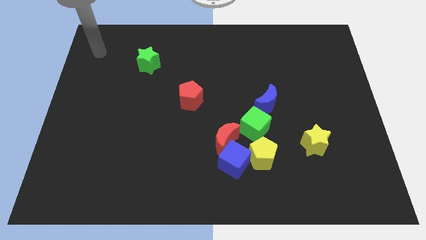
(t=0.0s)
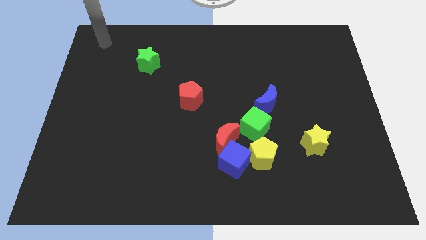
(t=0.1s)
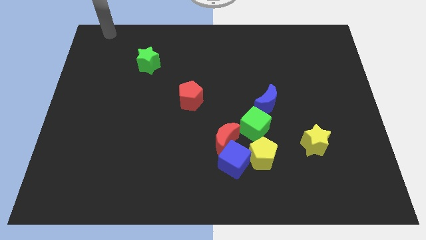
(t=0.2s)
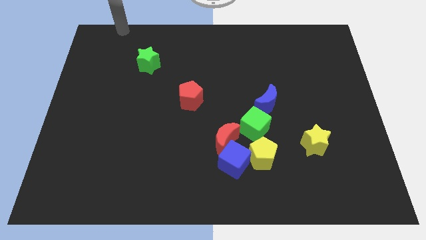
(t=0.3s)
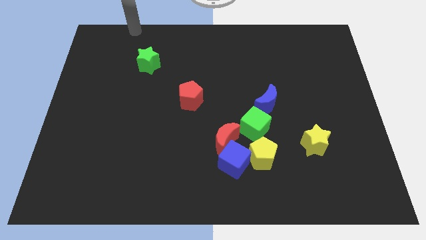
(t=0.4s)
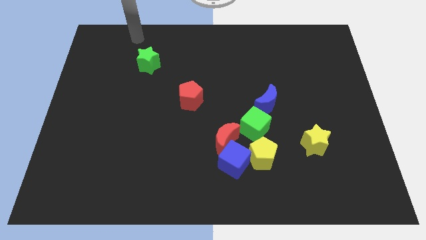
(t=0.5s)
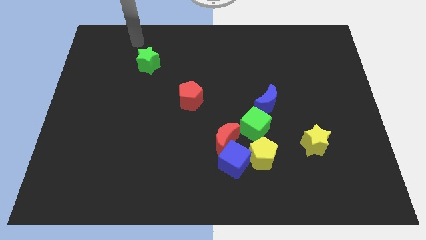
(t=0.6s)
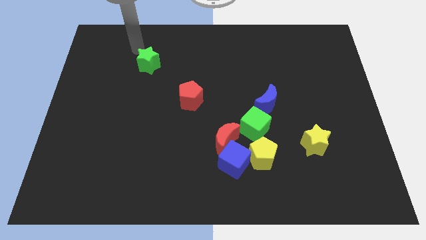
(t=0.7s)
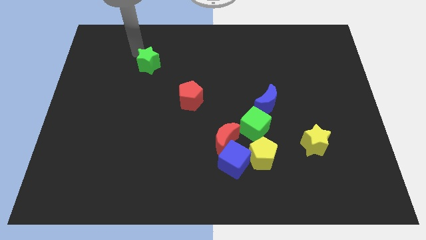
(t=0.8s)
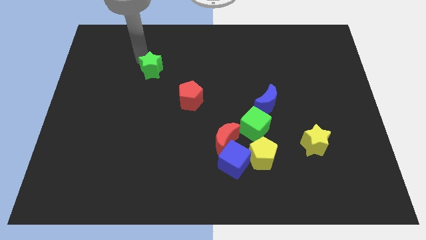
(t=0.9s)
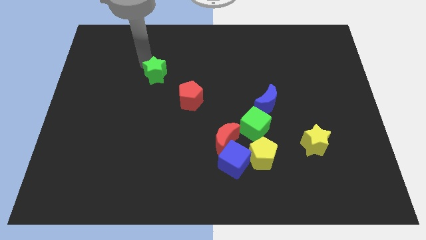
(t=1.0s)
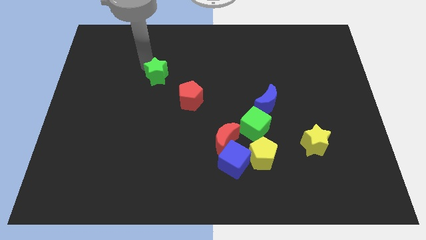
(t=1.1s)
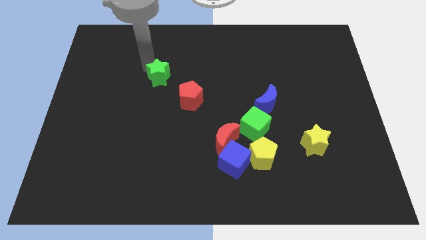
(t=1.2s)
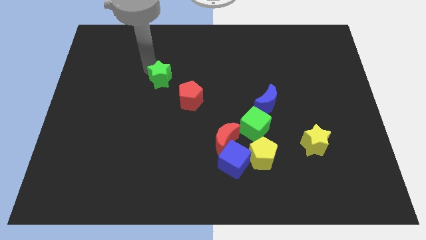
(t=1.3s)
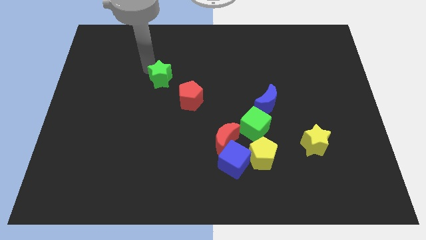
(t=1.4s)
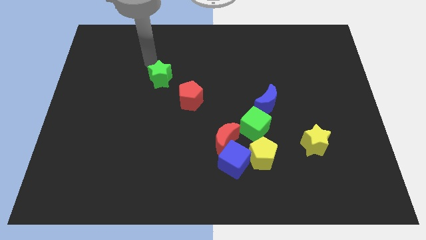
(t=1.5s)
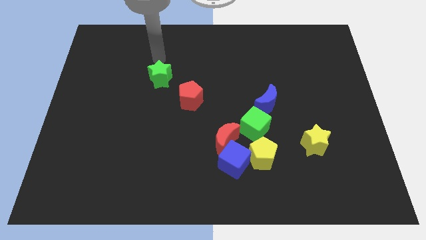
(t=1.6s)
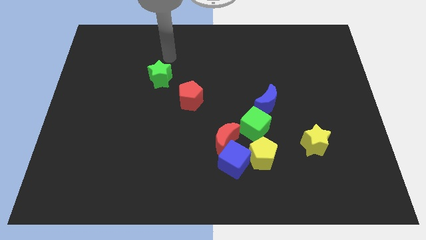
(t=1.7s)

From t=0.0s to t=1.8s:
point the arm at the top side of the green star

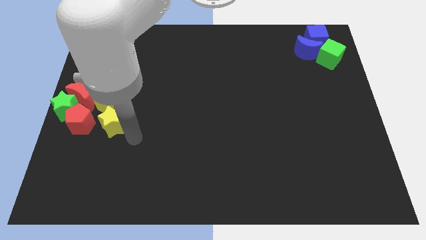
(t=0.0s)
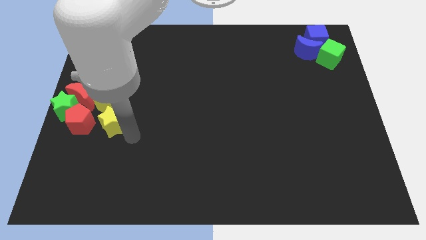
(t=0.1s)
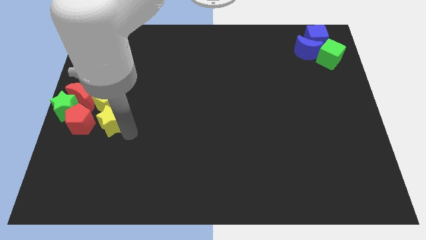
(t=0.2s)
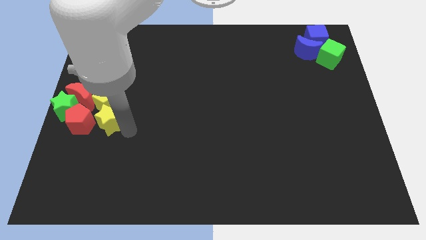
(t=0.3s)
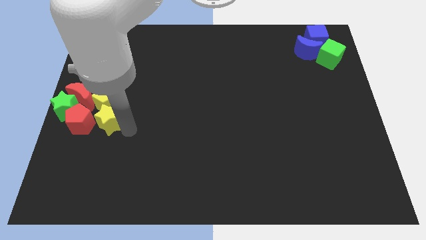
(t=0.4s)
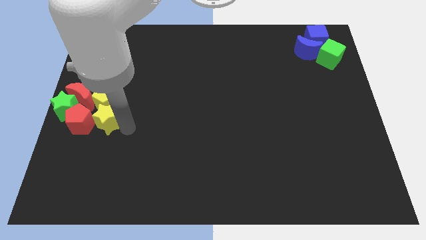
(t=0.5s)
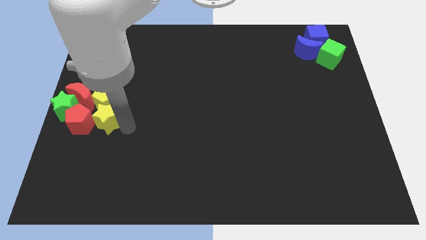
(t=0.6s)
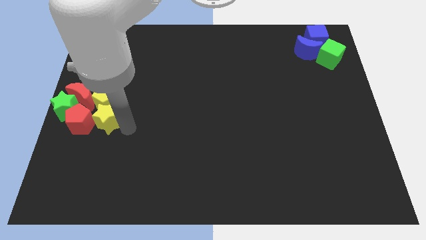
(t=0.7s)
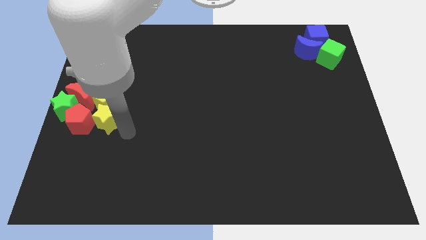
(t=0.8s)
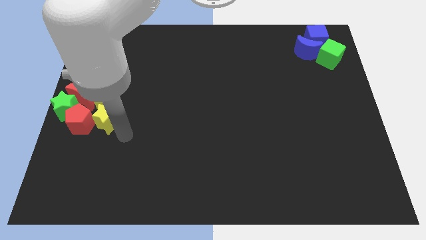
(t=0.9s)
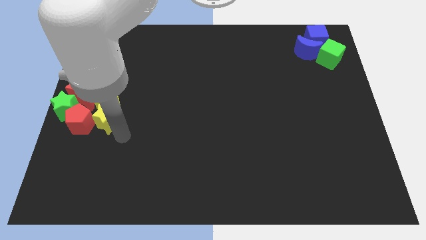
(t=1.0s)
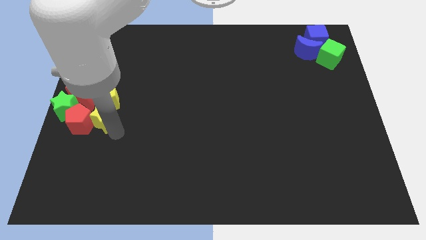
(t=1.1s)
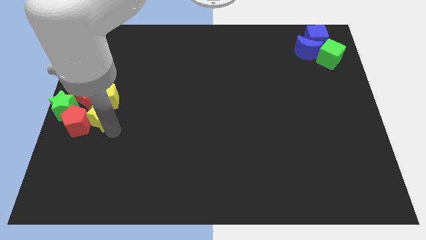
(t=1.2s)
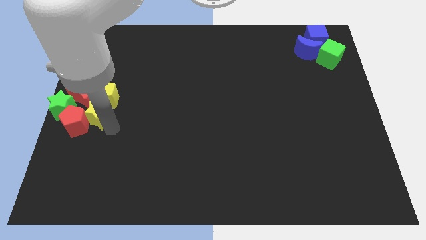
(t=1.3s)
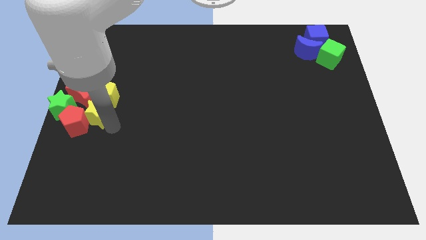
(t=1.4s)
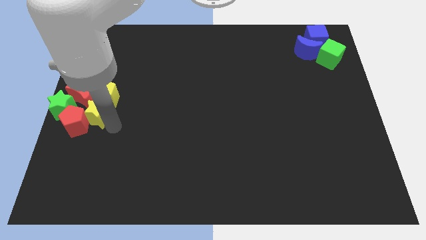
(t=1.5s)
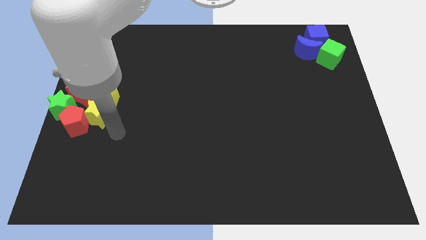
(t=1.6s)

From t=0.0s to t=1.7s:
move the yellow star towards the red crescent

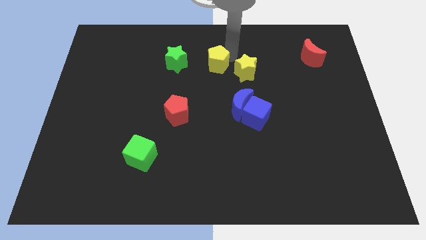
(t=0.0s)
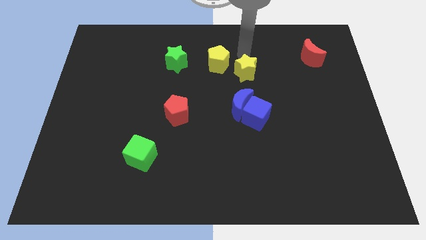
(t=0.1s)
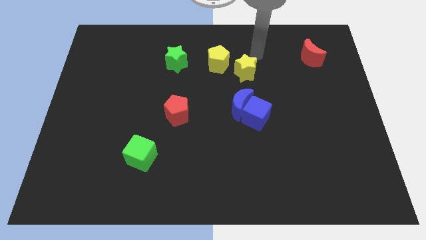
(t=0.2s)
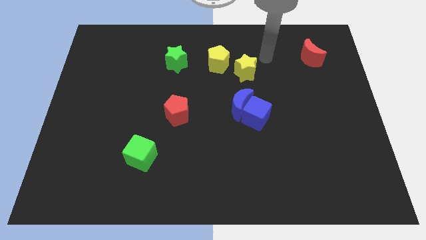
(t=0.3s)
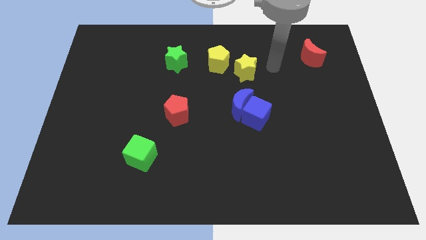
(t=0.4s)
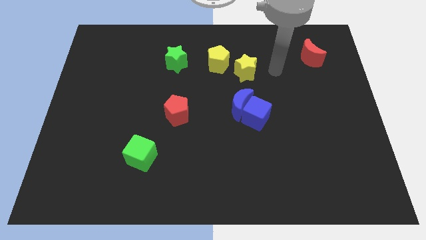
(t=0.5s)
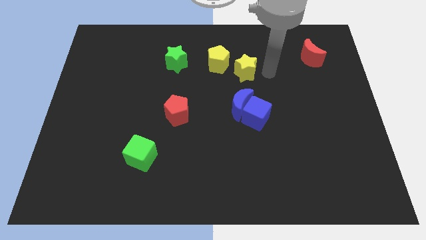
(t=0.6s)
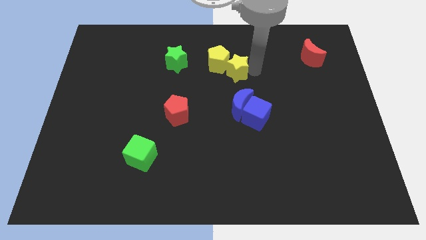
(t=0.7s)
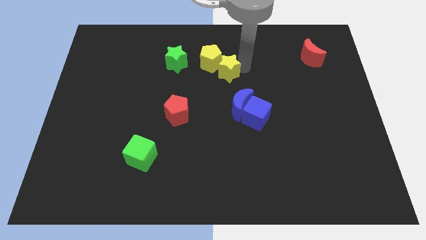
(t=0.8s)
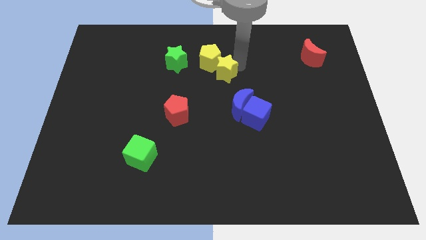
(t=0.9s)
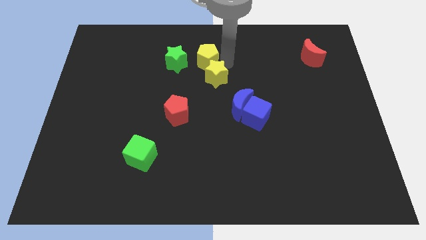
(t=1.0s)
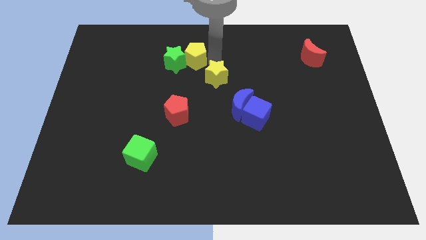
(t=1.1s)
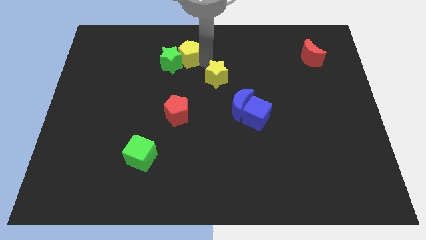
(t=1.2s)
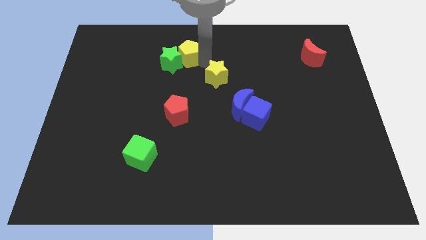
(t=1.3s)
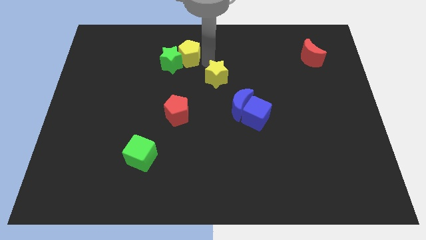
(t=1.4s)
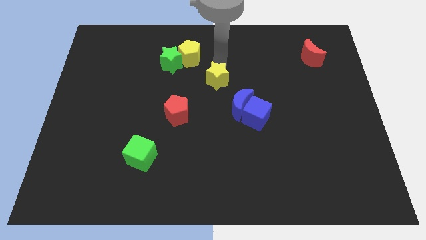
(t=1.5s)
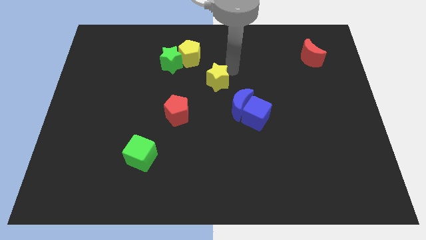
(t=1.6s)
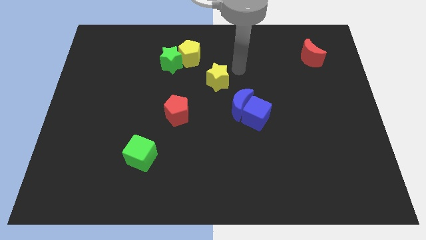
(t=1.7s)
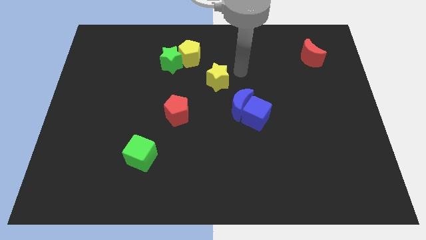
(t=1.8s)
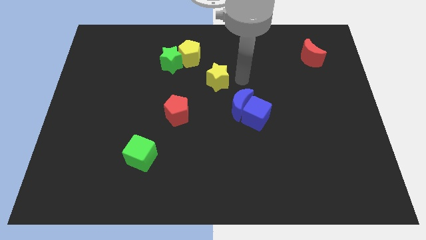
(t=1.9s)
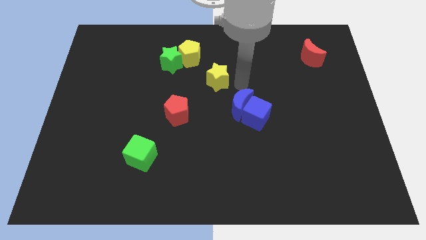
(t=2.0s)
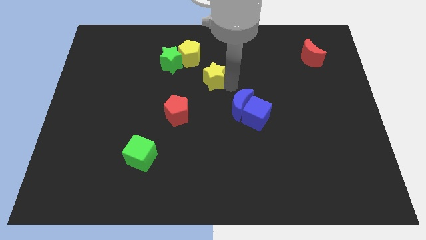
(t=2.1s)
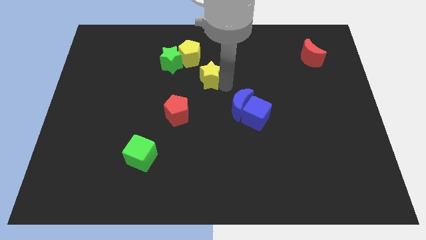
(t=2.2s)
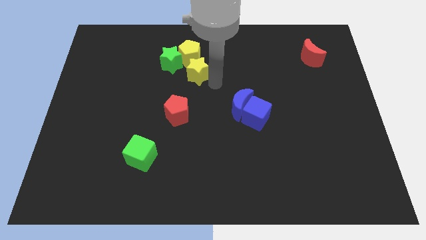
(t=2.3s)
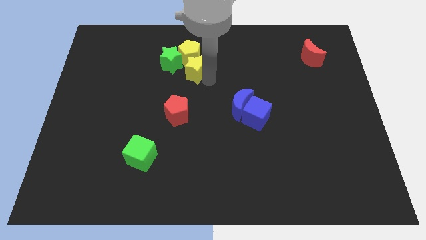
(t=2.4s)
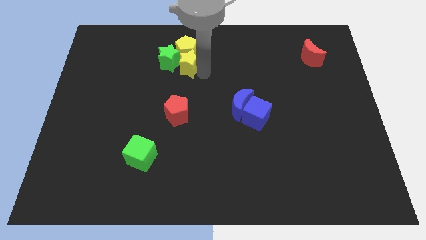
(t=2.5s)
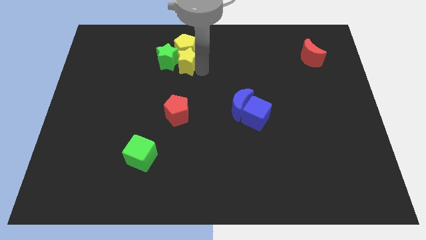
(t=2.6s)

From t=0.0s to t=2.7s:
push the yellow blocks into the green star

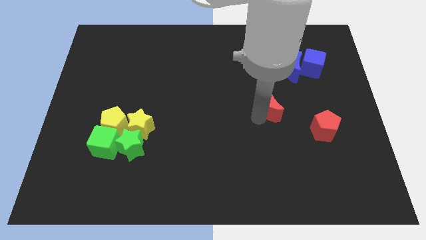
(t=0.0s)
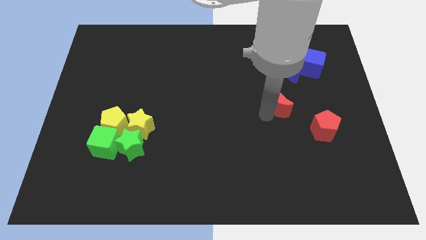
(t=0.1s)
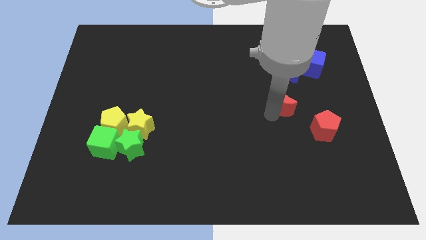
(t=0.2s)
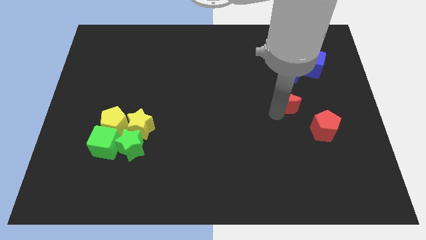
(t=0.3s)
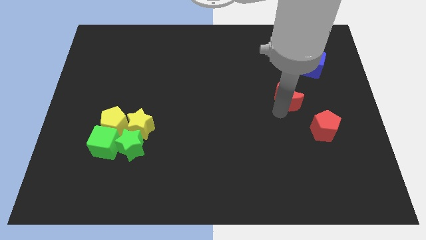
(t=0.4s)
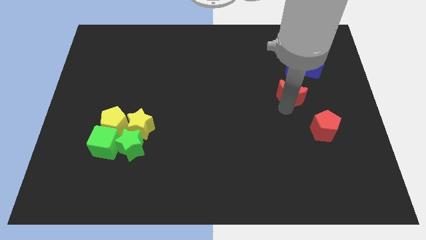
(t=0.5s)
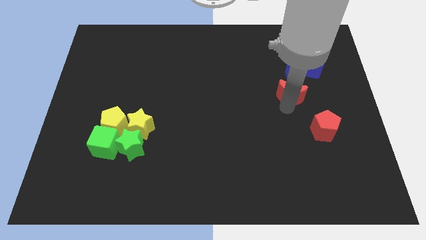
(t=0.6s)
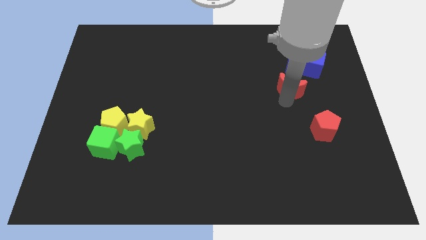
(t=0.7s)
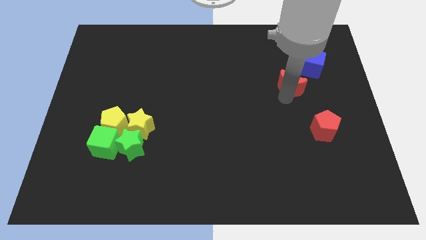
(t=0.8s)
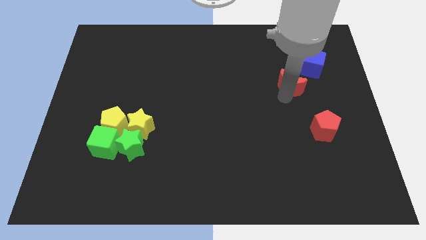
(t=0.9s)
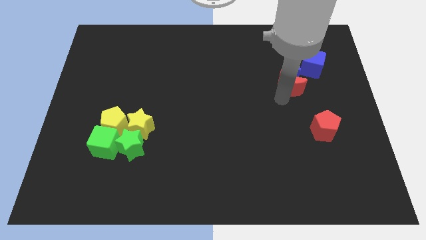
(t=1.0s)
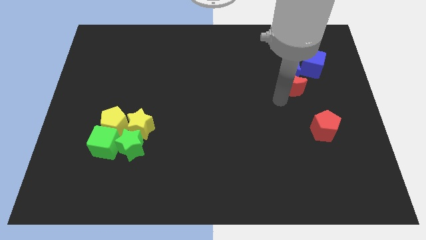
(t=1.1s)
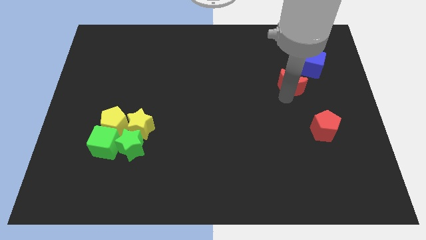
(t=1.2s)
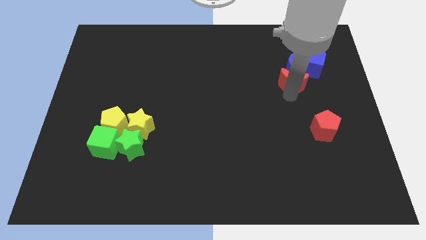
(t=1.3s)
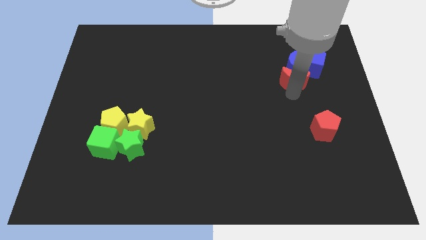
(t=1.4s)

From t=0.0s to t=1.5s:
move the red moon below the blue moon

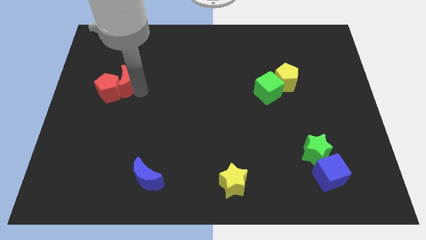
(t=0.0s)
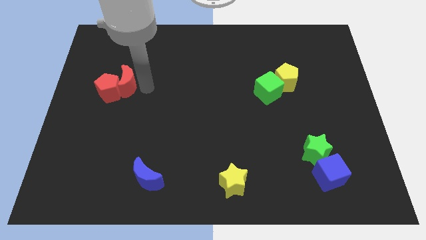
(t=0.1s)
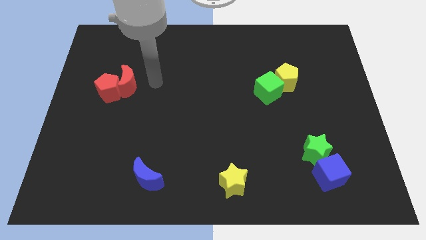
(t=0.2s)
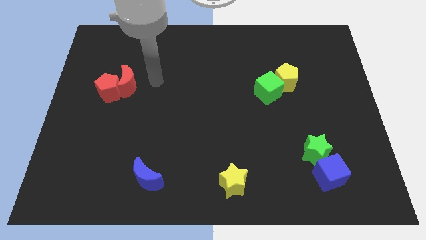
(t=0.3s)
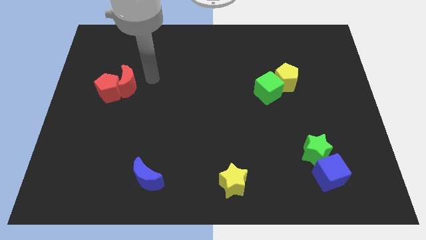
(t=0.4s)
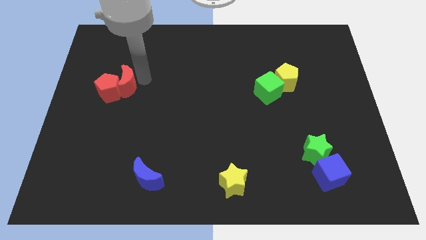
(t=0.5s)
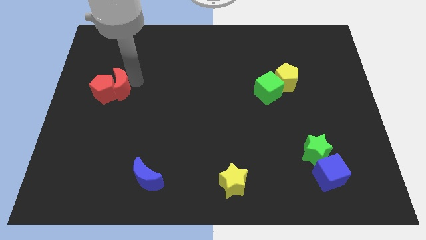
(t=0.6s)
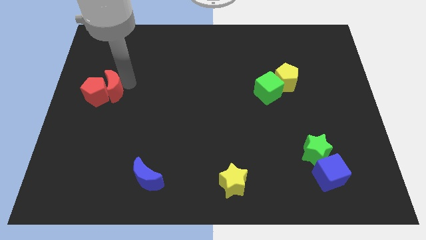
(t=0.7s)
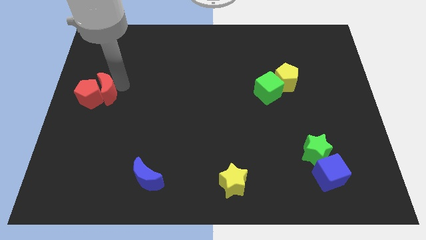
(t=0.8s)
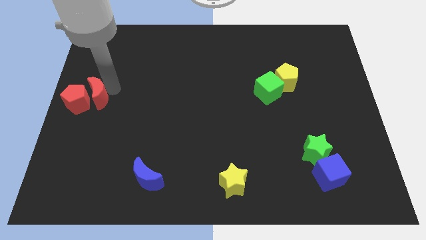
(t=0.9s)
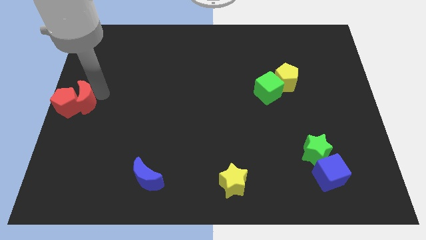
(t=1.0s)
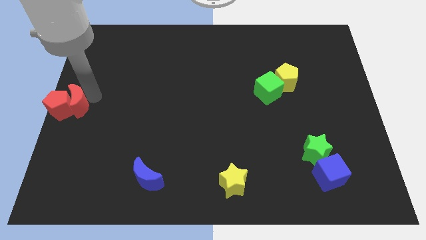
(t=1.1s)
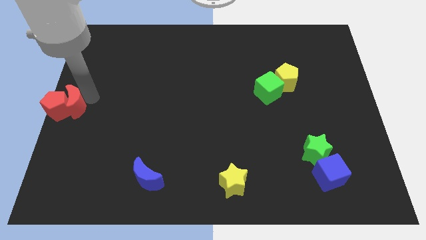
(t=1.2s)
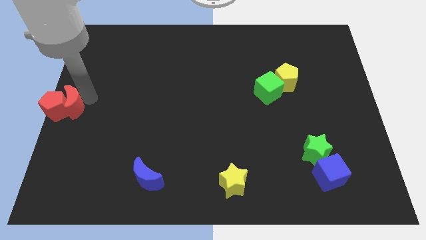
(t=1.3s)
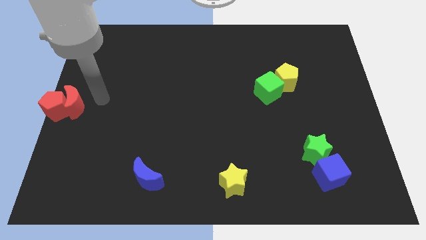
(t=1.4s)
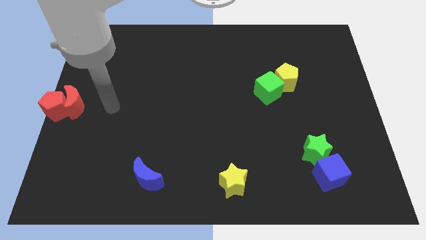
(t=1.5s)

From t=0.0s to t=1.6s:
place red crescent and red pentagon to center left of board
